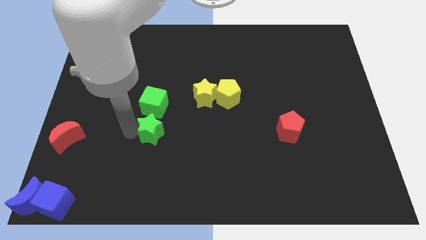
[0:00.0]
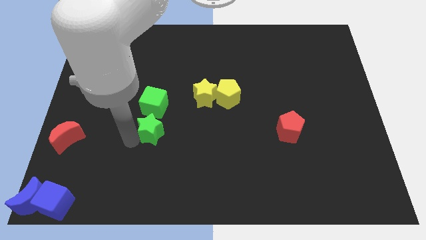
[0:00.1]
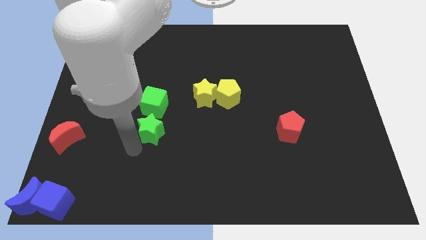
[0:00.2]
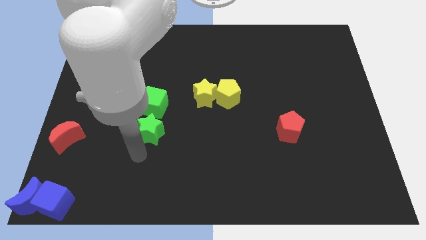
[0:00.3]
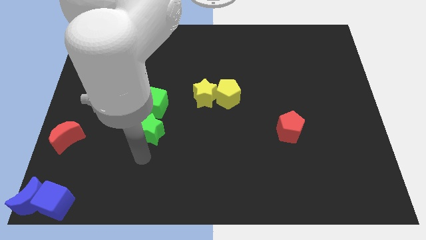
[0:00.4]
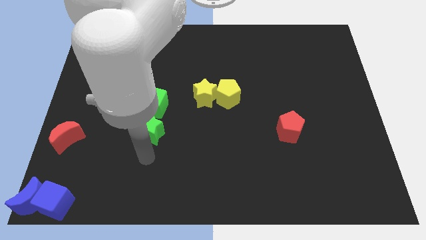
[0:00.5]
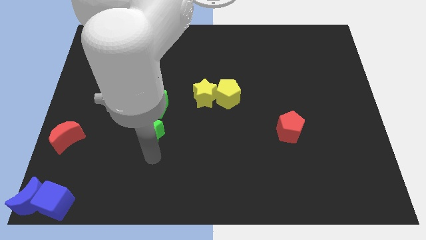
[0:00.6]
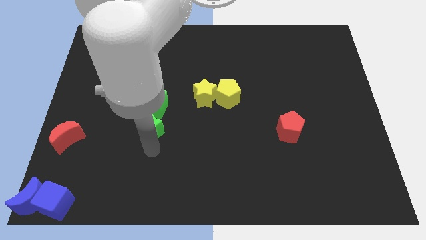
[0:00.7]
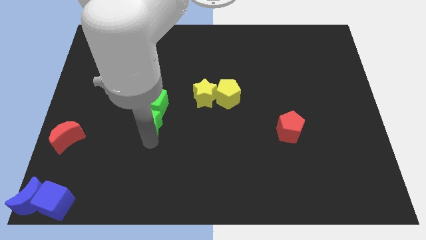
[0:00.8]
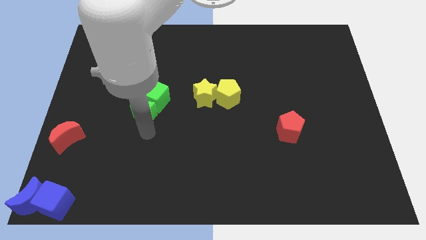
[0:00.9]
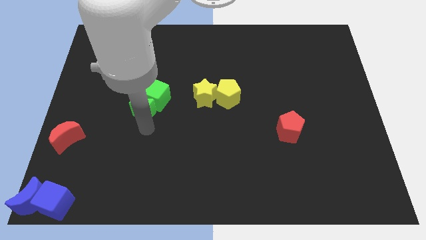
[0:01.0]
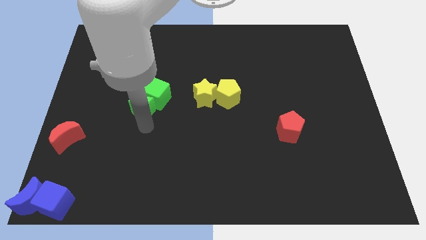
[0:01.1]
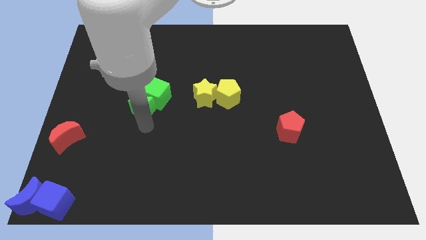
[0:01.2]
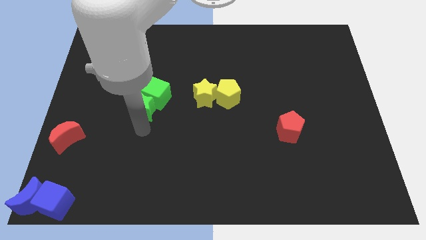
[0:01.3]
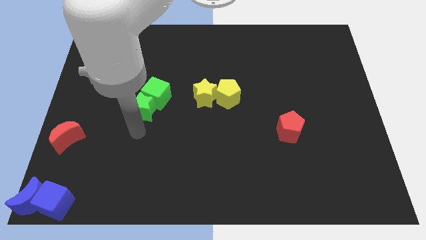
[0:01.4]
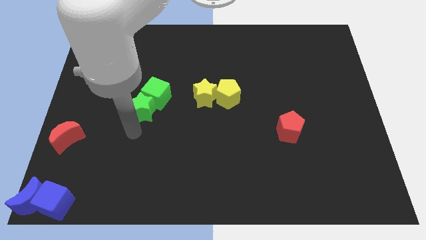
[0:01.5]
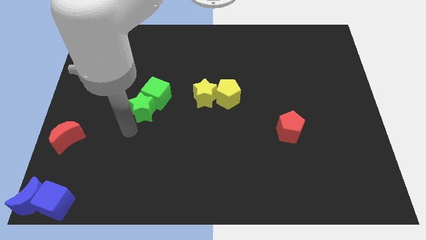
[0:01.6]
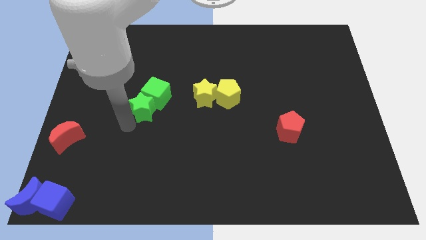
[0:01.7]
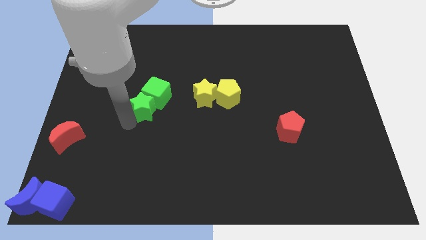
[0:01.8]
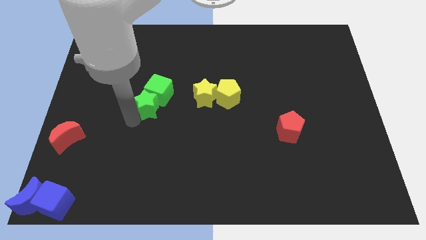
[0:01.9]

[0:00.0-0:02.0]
push the green star into the green cube

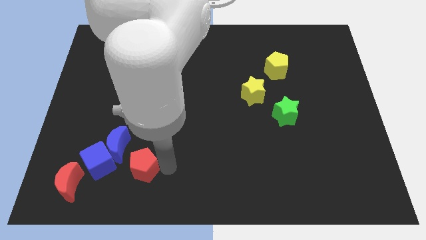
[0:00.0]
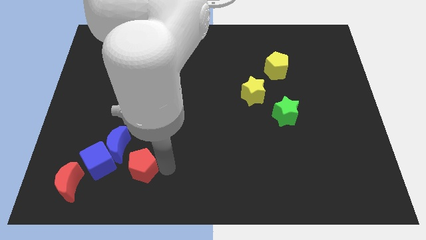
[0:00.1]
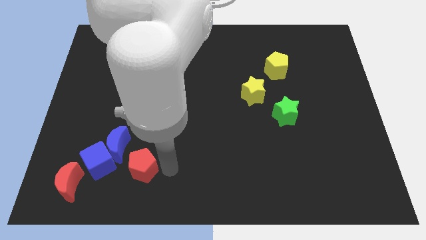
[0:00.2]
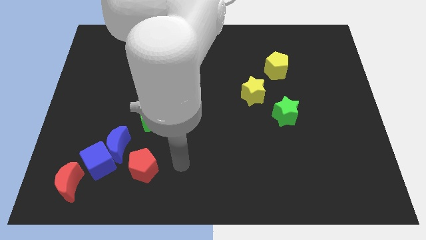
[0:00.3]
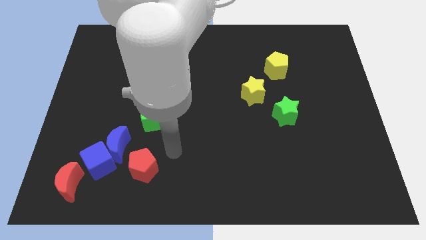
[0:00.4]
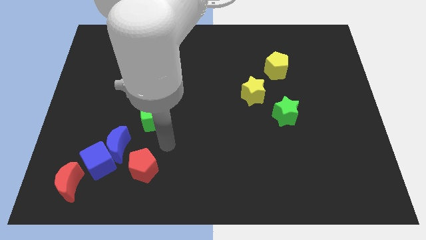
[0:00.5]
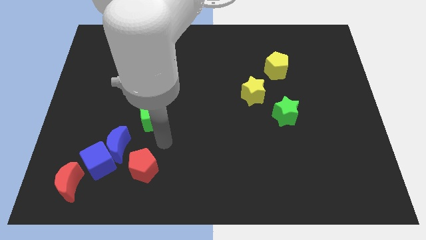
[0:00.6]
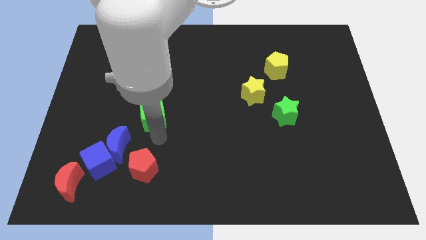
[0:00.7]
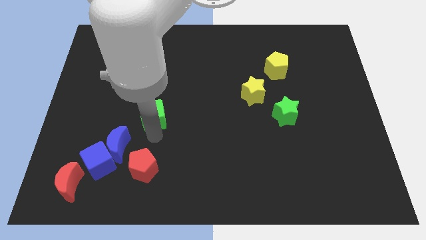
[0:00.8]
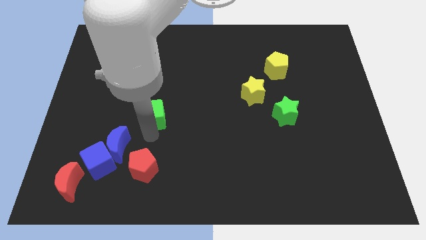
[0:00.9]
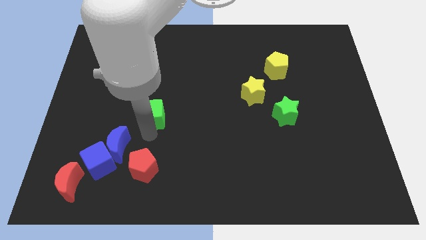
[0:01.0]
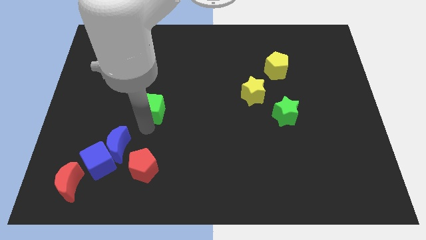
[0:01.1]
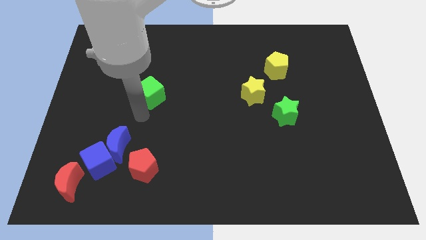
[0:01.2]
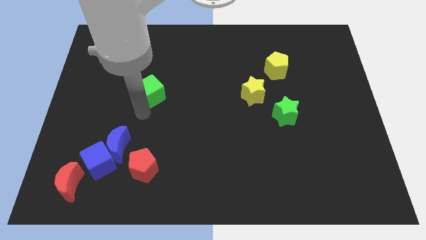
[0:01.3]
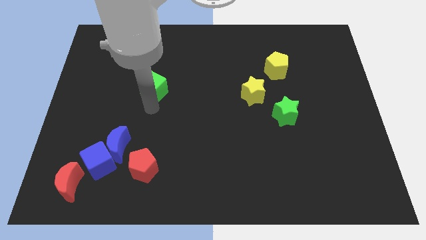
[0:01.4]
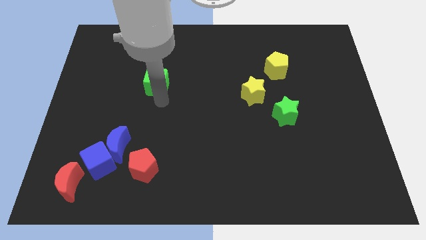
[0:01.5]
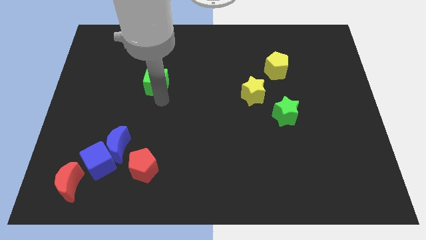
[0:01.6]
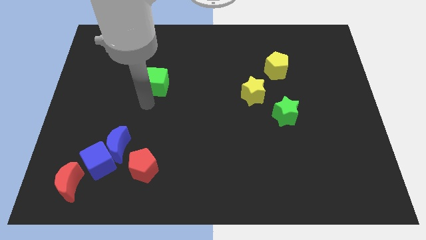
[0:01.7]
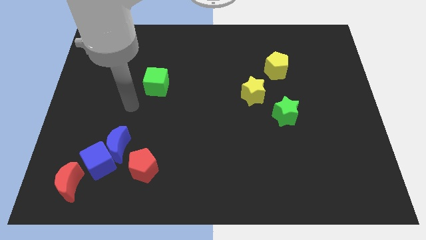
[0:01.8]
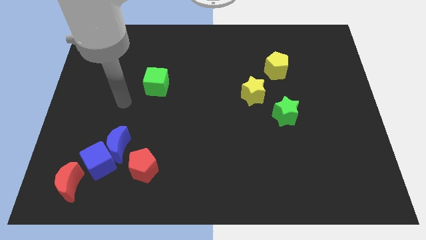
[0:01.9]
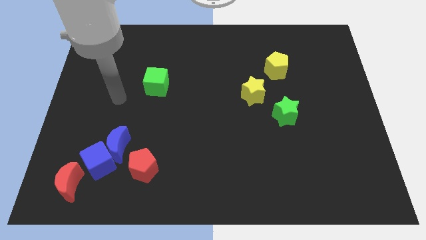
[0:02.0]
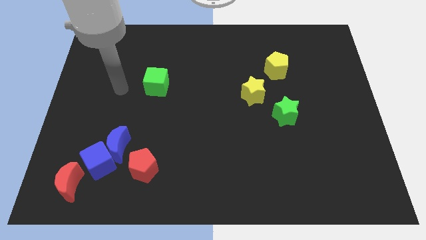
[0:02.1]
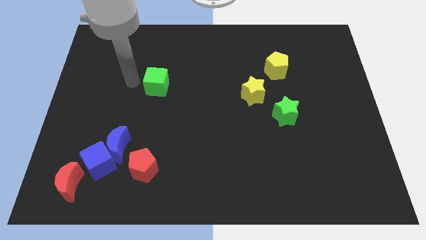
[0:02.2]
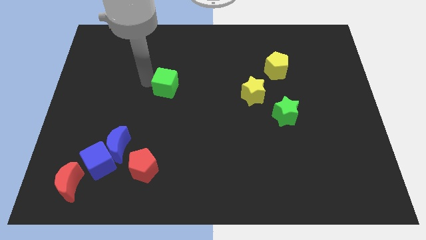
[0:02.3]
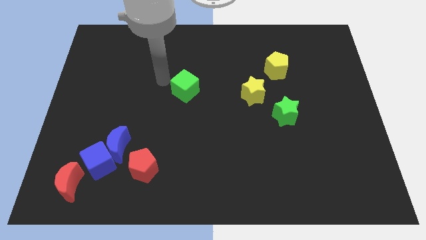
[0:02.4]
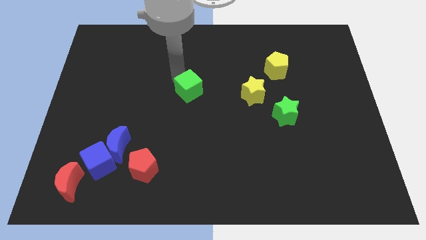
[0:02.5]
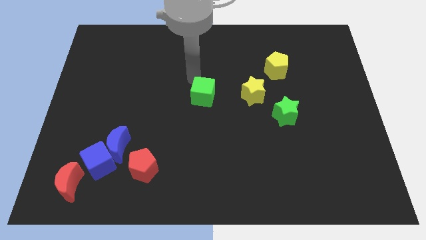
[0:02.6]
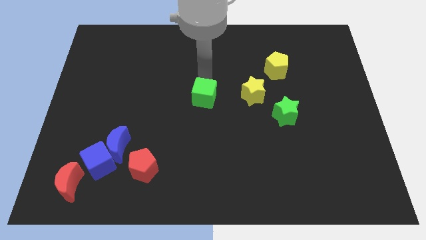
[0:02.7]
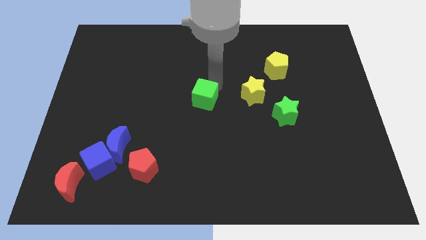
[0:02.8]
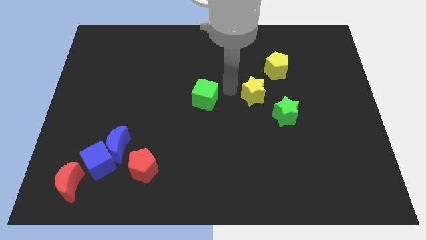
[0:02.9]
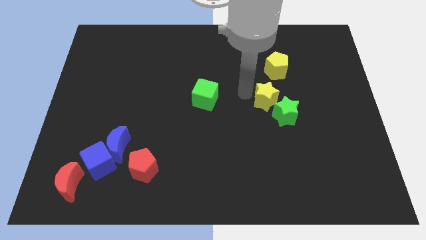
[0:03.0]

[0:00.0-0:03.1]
push the green cube towards the left side of the yellow star

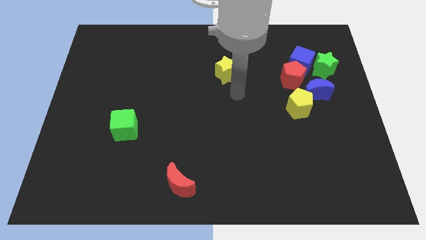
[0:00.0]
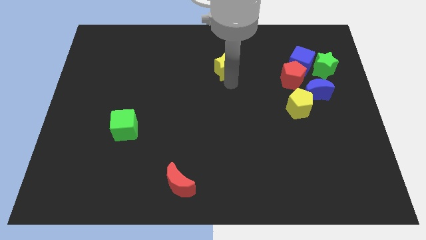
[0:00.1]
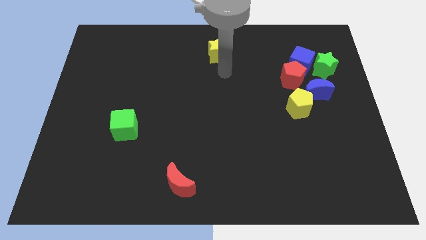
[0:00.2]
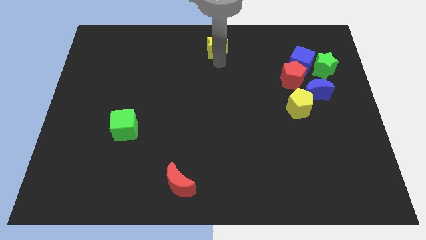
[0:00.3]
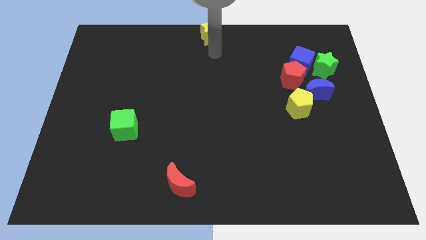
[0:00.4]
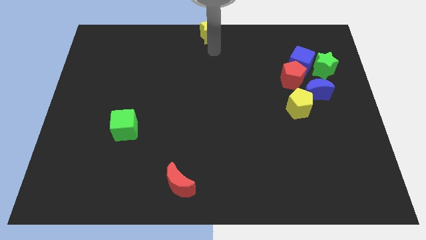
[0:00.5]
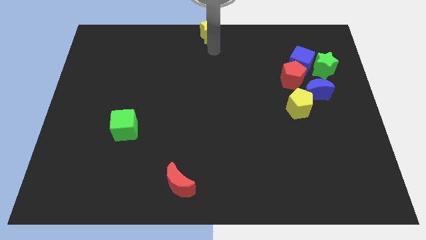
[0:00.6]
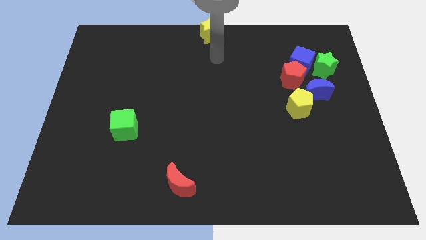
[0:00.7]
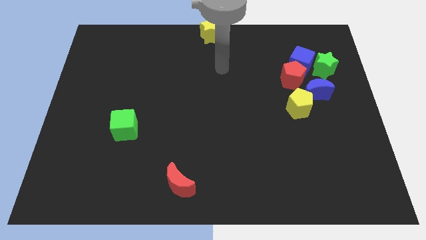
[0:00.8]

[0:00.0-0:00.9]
put the yellow star at the center top of the board

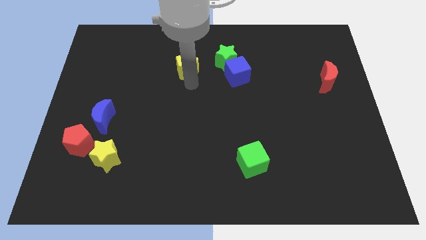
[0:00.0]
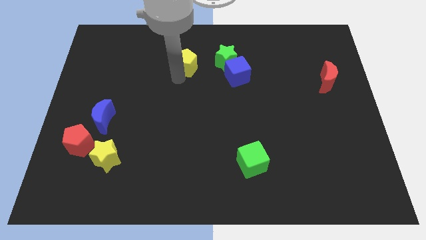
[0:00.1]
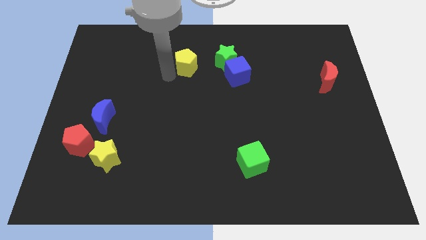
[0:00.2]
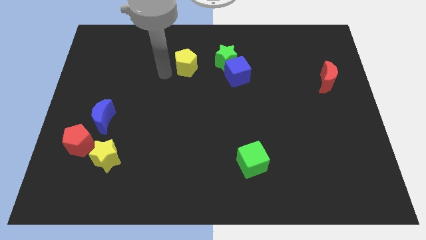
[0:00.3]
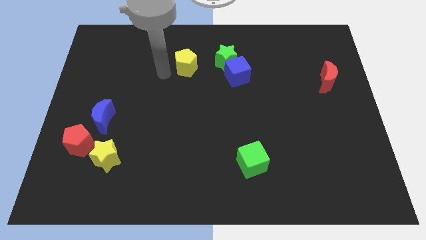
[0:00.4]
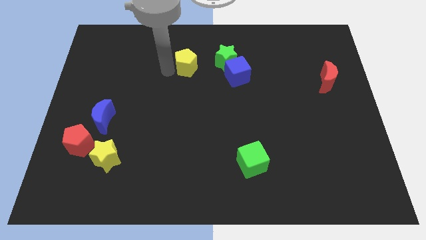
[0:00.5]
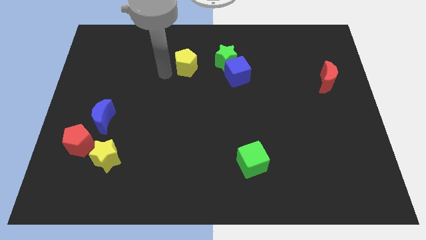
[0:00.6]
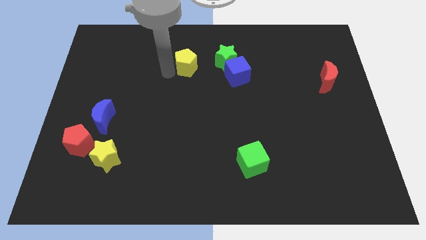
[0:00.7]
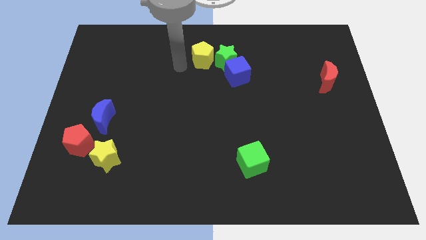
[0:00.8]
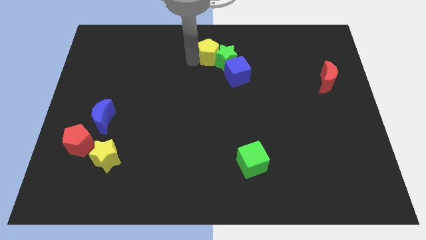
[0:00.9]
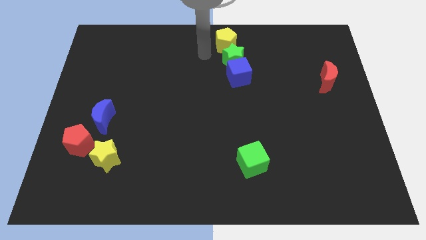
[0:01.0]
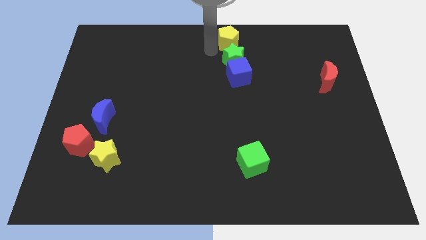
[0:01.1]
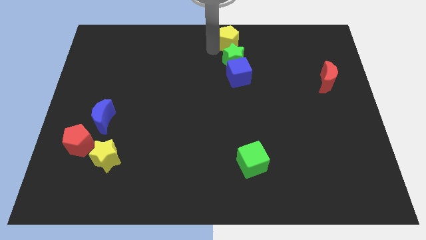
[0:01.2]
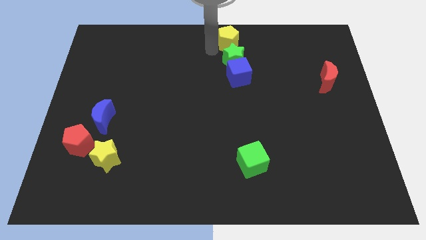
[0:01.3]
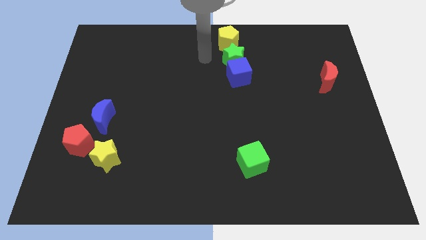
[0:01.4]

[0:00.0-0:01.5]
push the yellow pentagon to the top of green star

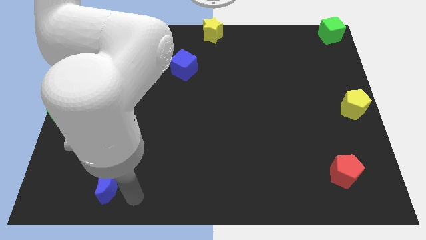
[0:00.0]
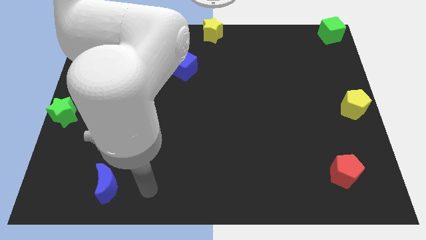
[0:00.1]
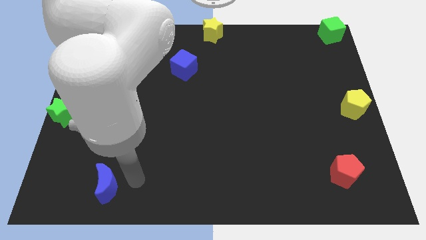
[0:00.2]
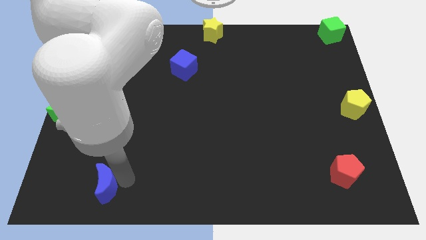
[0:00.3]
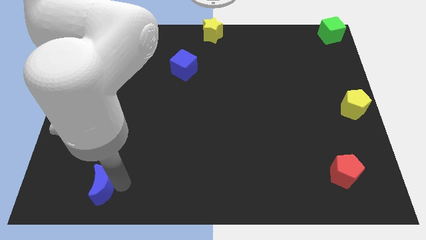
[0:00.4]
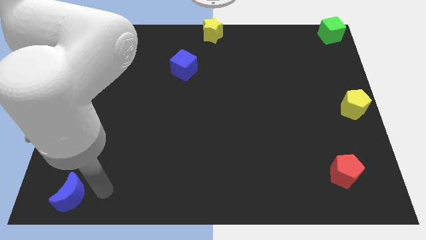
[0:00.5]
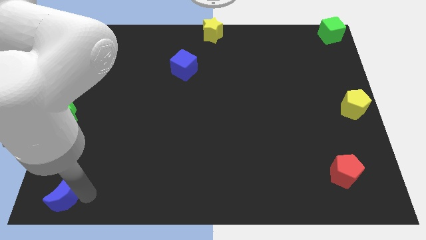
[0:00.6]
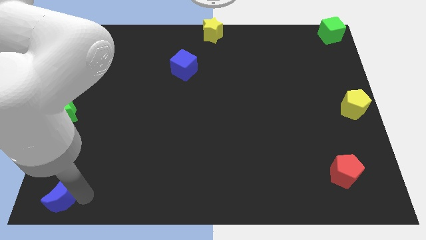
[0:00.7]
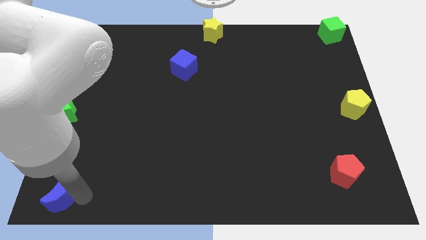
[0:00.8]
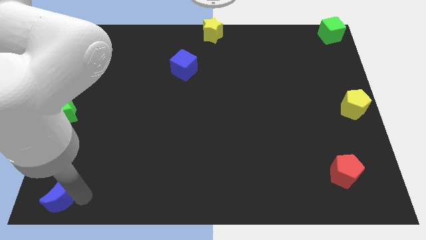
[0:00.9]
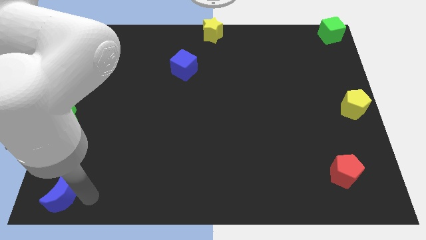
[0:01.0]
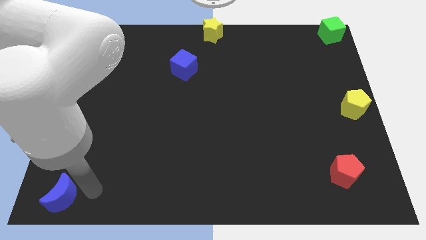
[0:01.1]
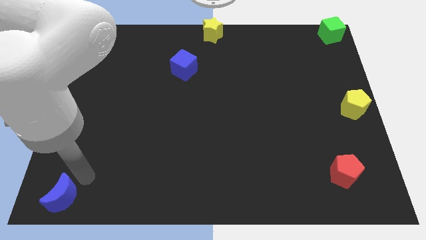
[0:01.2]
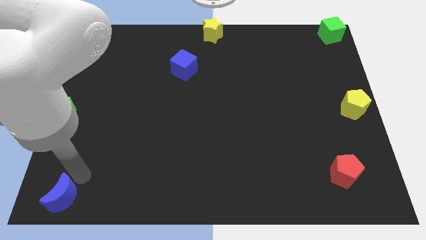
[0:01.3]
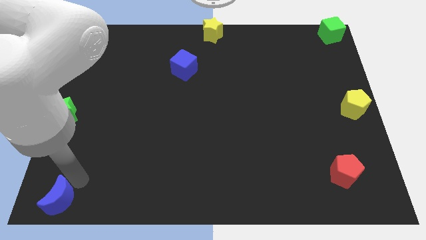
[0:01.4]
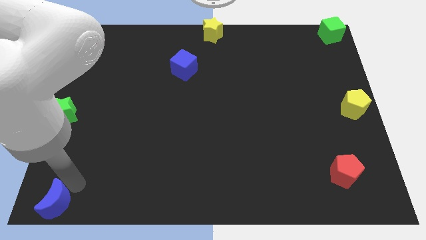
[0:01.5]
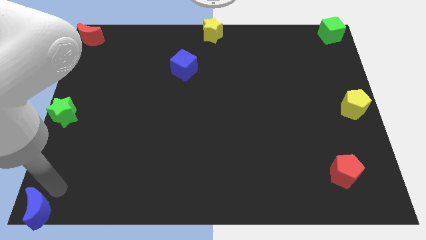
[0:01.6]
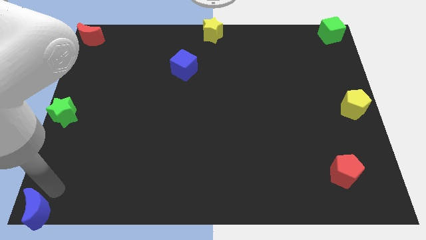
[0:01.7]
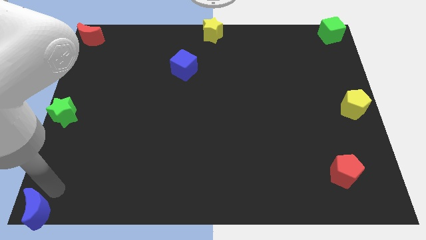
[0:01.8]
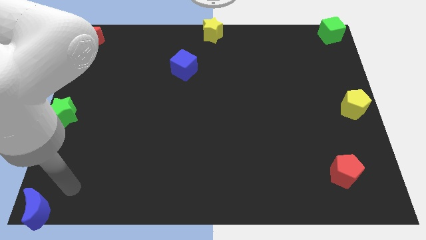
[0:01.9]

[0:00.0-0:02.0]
place the blue moon at the bottom left corner of the board
